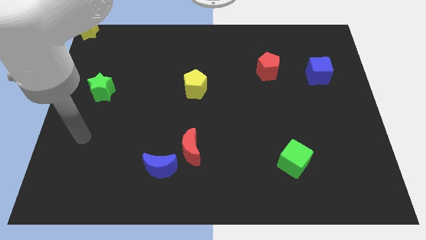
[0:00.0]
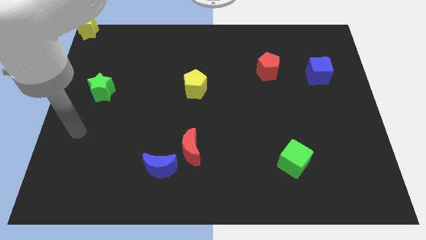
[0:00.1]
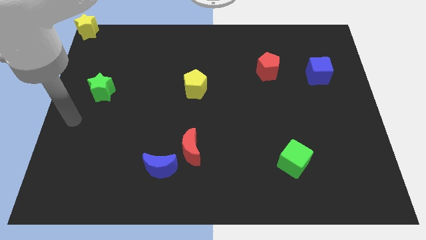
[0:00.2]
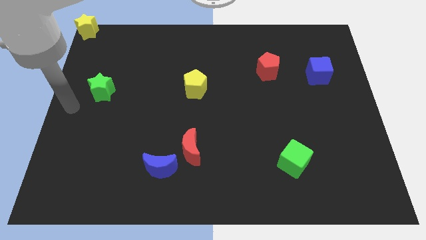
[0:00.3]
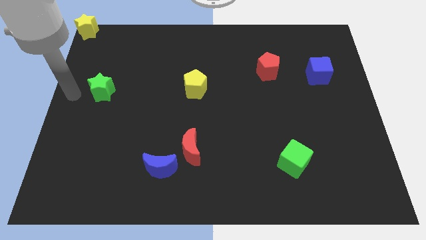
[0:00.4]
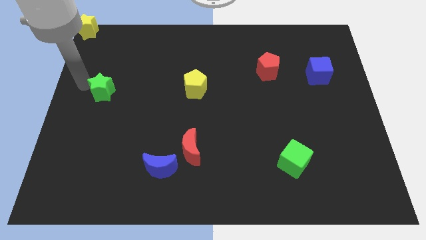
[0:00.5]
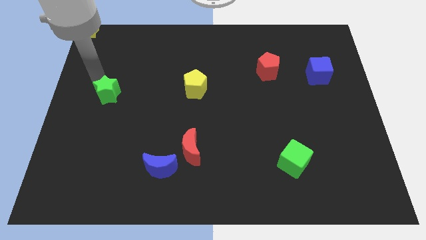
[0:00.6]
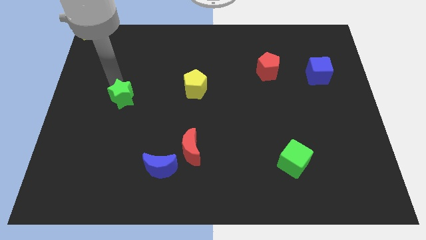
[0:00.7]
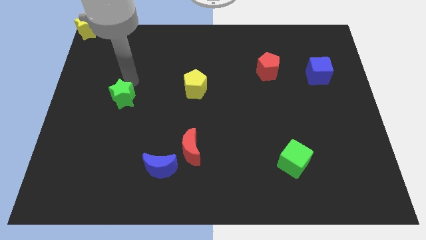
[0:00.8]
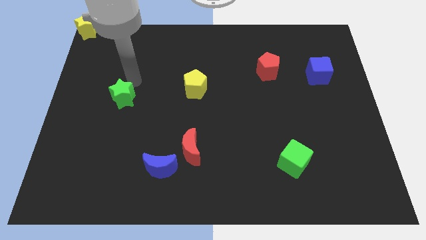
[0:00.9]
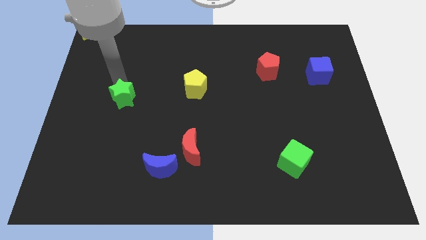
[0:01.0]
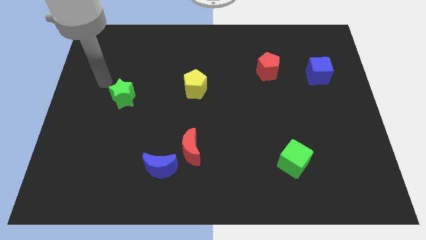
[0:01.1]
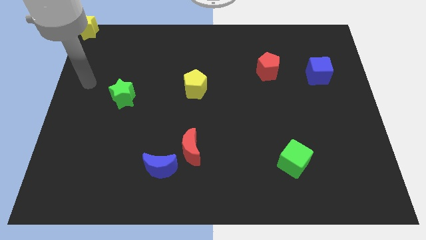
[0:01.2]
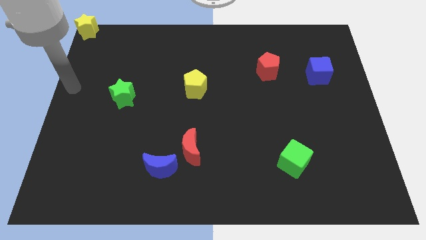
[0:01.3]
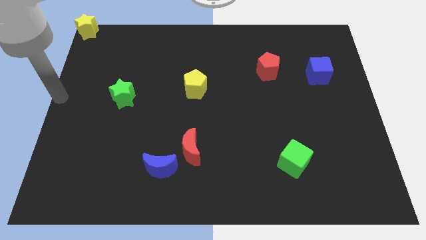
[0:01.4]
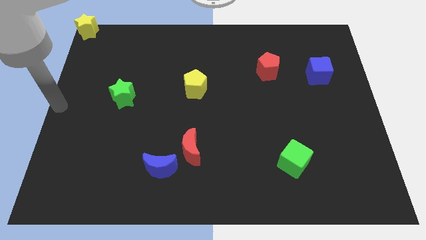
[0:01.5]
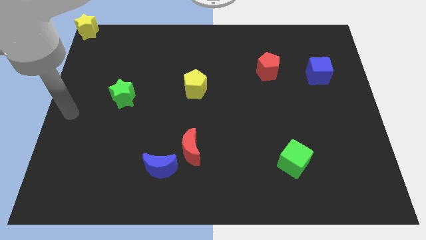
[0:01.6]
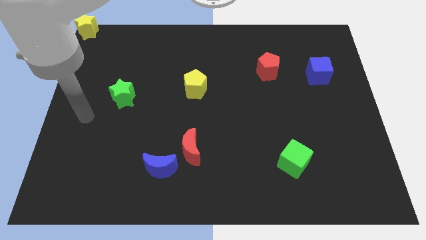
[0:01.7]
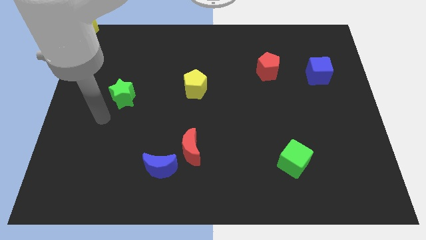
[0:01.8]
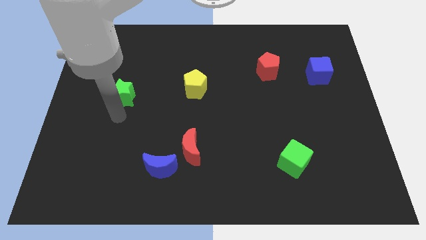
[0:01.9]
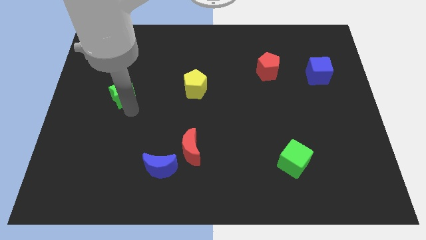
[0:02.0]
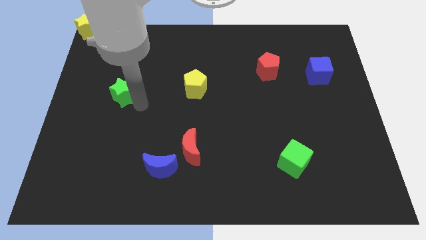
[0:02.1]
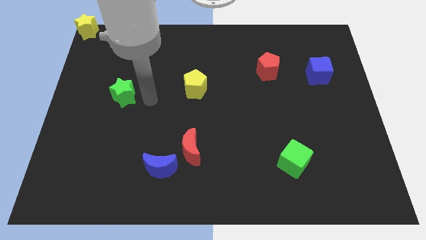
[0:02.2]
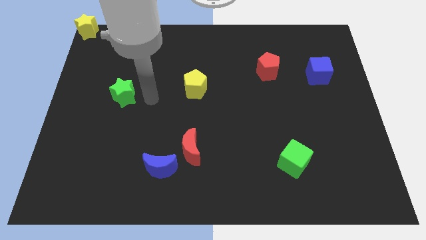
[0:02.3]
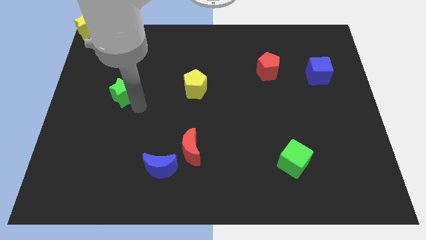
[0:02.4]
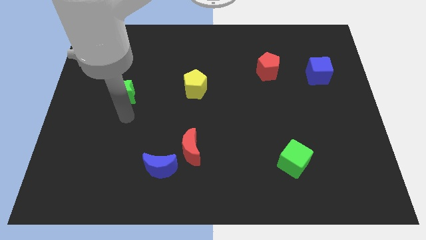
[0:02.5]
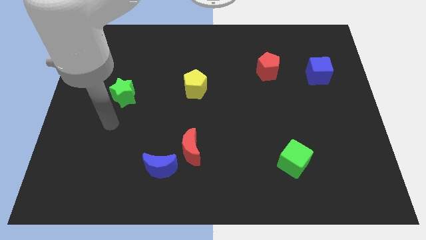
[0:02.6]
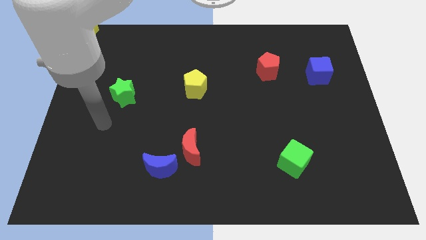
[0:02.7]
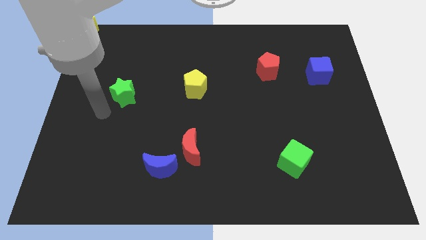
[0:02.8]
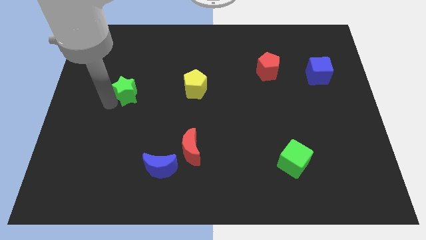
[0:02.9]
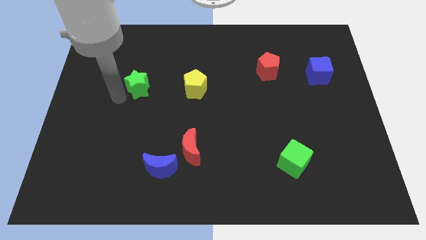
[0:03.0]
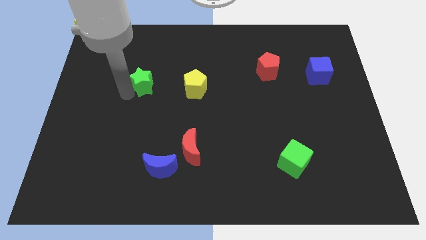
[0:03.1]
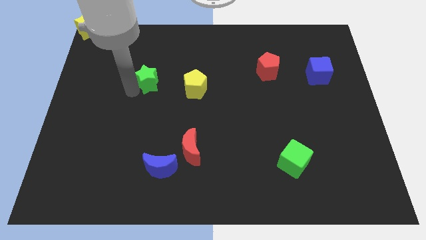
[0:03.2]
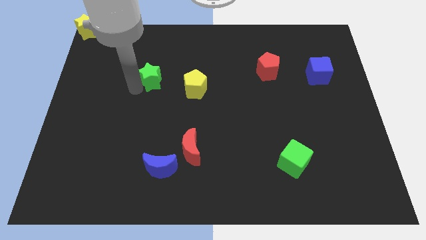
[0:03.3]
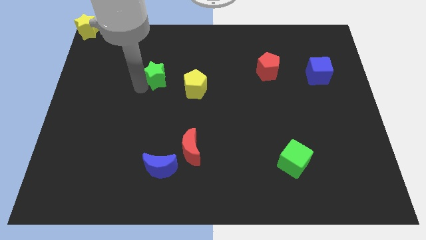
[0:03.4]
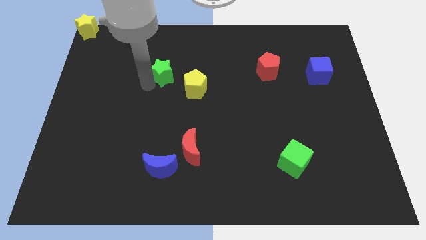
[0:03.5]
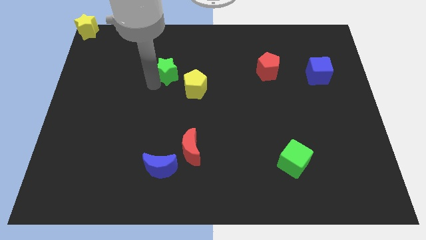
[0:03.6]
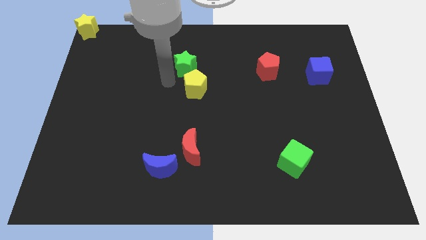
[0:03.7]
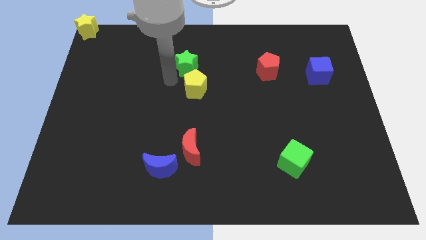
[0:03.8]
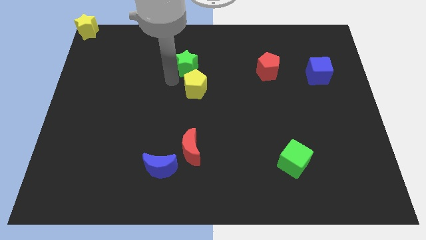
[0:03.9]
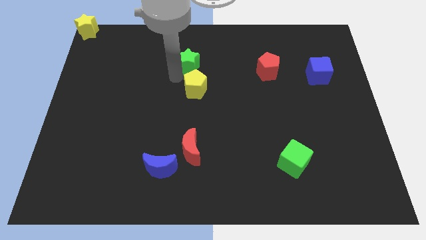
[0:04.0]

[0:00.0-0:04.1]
place the green star above the yellow pentagon

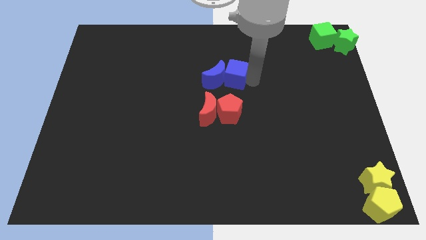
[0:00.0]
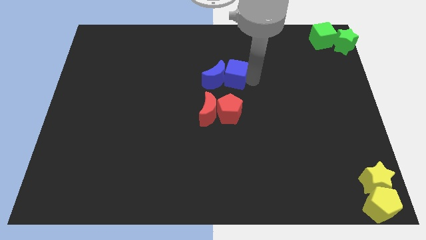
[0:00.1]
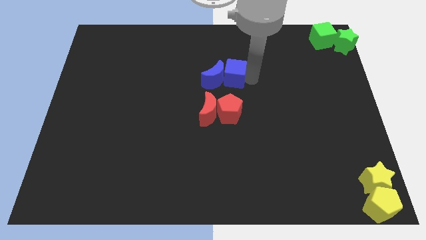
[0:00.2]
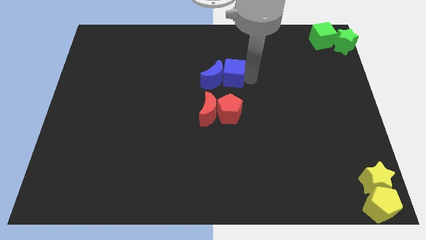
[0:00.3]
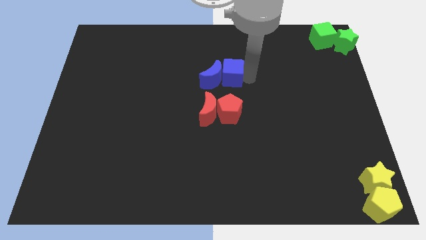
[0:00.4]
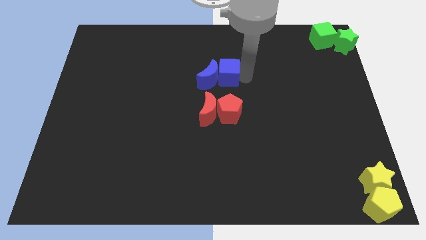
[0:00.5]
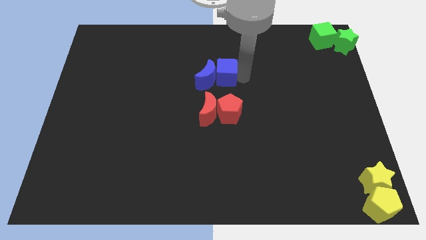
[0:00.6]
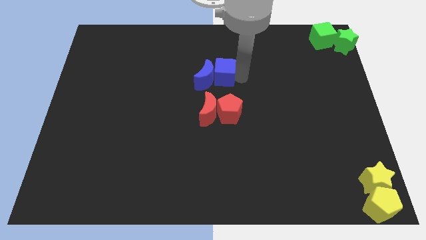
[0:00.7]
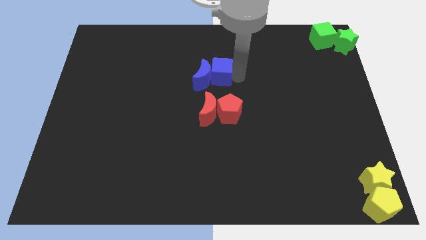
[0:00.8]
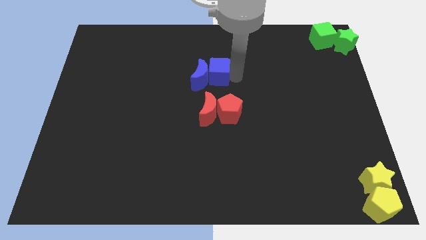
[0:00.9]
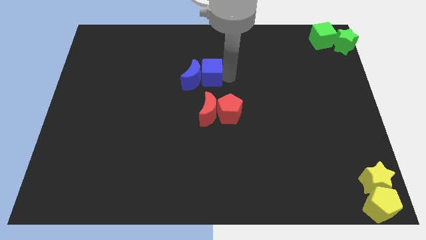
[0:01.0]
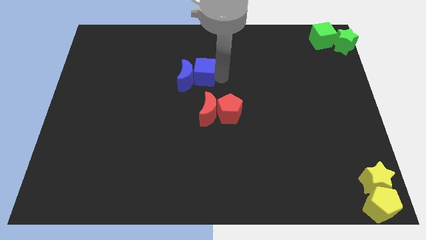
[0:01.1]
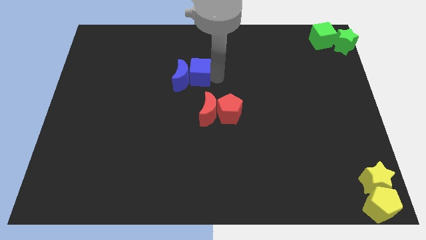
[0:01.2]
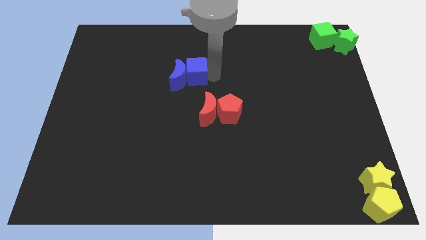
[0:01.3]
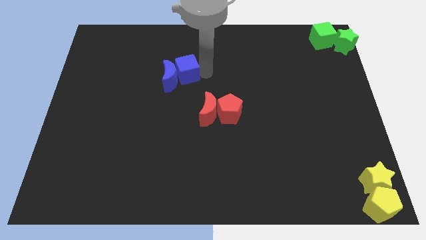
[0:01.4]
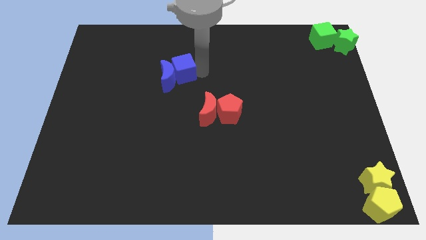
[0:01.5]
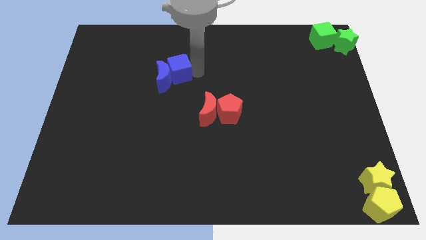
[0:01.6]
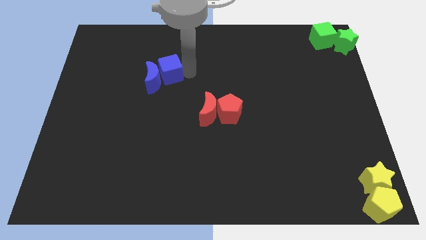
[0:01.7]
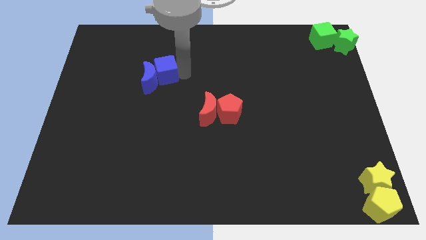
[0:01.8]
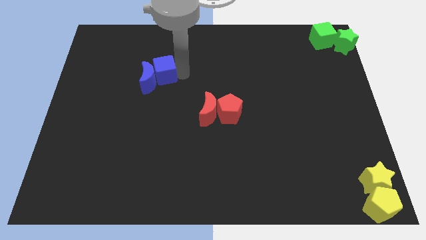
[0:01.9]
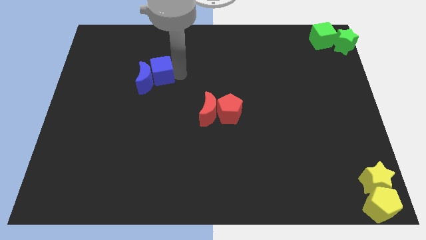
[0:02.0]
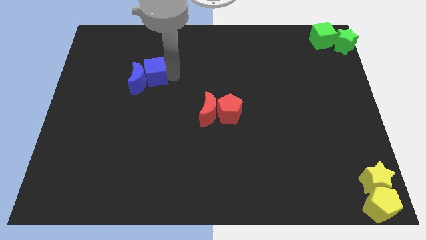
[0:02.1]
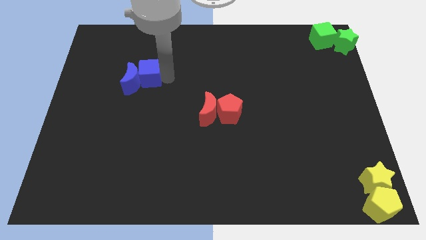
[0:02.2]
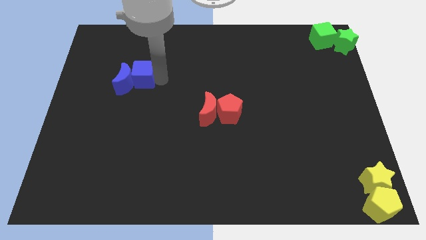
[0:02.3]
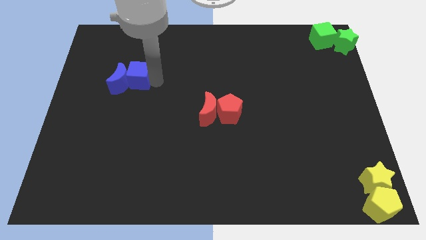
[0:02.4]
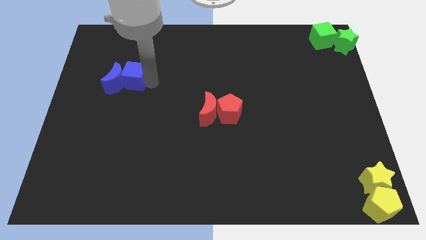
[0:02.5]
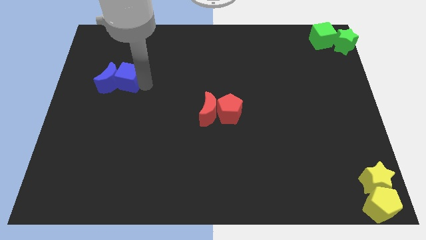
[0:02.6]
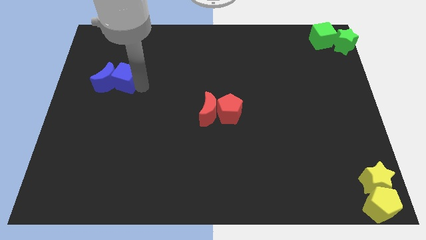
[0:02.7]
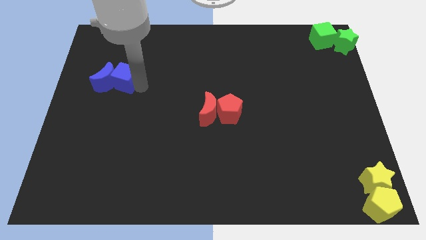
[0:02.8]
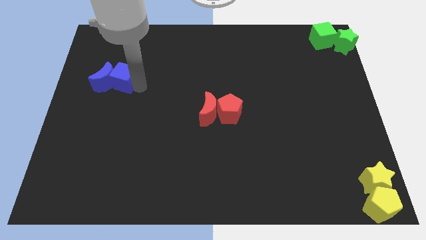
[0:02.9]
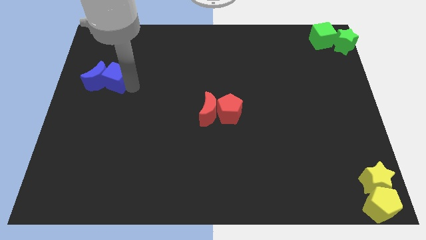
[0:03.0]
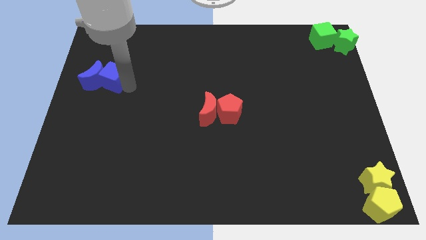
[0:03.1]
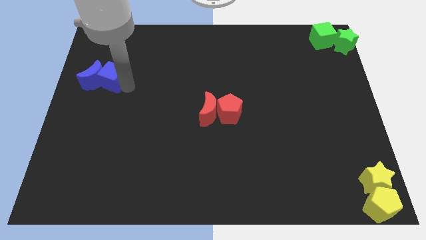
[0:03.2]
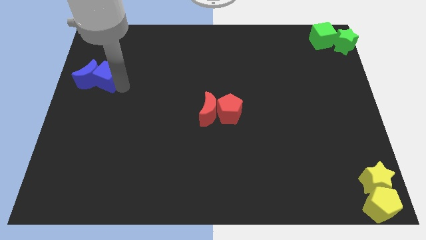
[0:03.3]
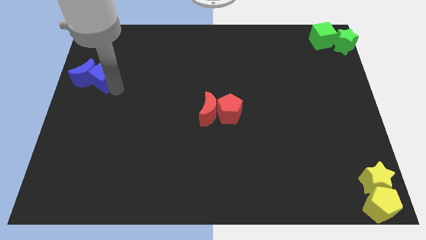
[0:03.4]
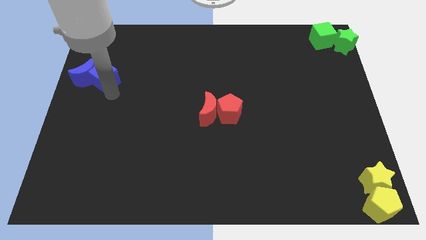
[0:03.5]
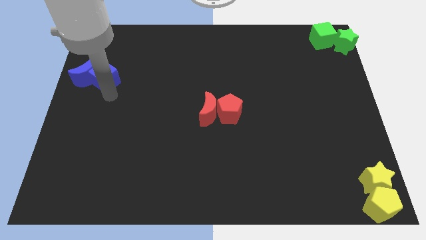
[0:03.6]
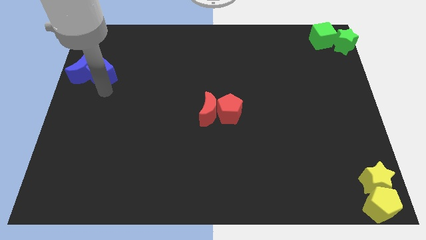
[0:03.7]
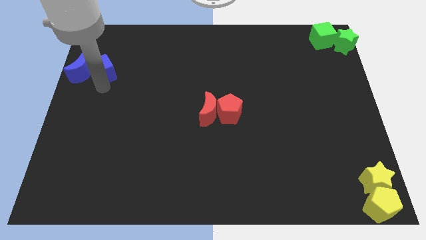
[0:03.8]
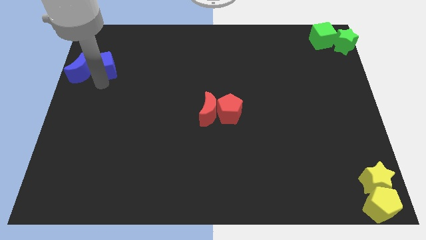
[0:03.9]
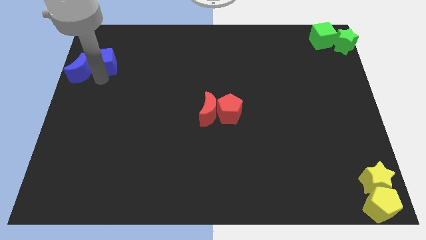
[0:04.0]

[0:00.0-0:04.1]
push the blue cube and blue crescent to the left side of the board

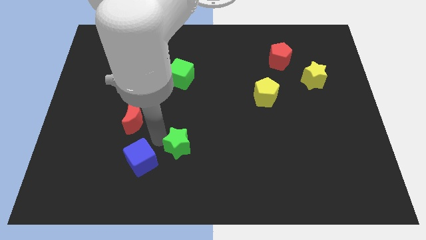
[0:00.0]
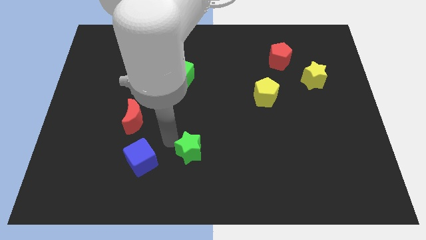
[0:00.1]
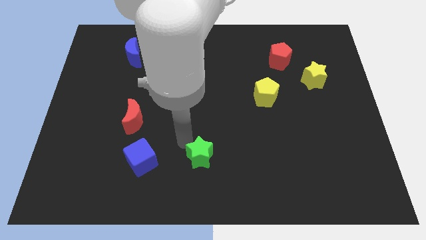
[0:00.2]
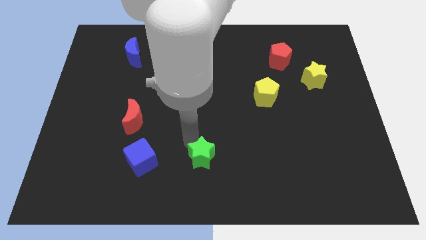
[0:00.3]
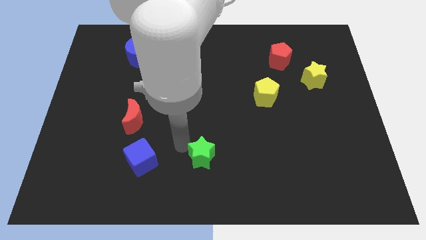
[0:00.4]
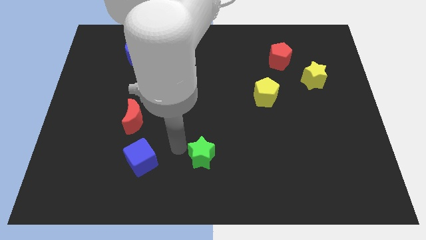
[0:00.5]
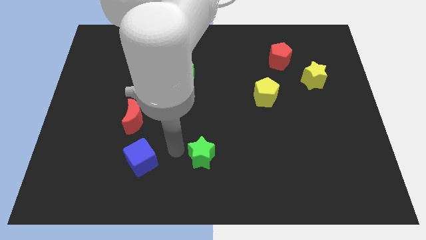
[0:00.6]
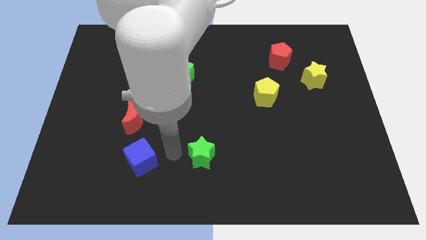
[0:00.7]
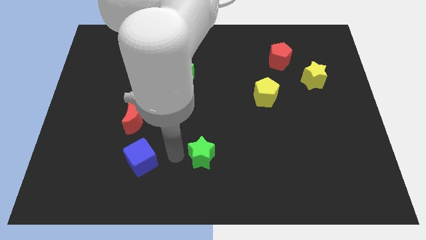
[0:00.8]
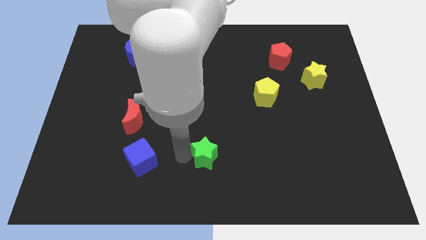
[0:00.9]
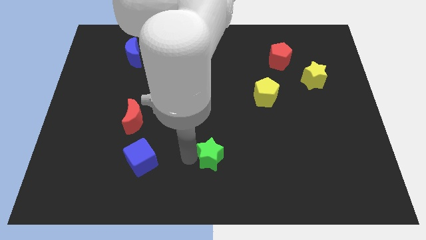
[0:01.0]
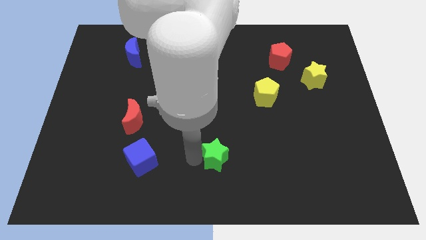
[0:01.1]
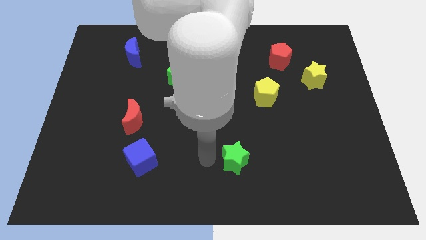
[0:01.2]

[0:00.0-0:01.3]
separate the green star and the blue cube
